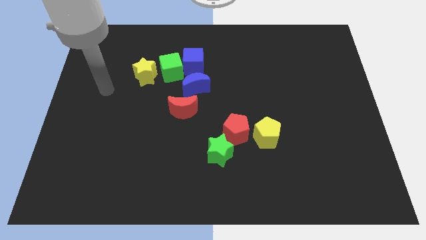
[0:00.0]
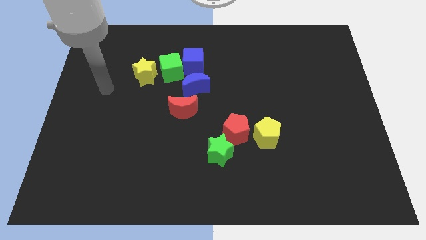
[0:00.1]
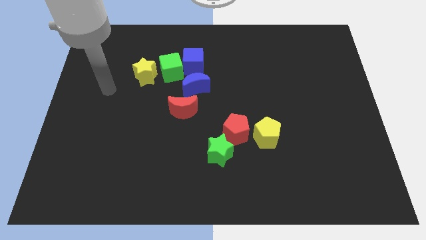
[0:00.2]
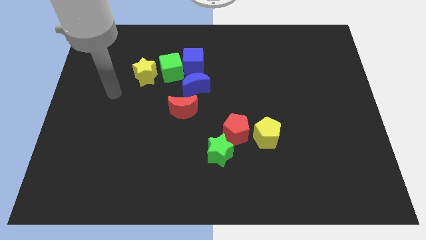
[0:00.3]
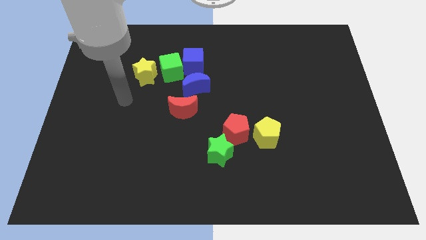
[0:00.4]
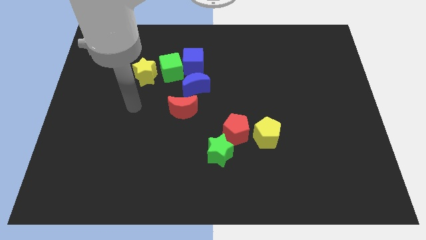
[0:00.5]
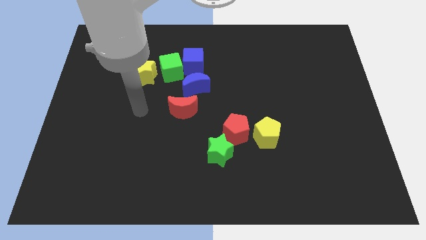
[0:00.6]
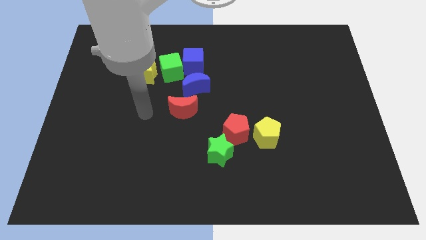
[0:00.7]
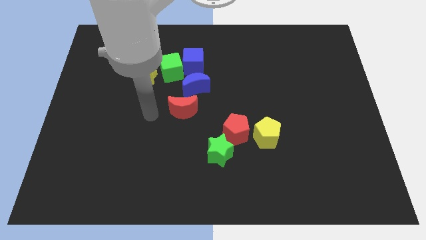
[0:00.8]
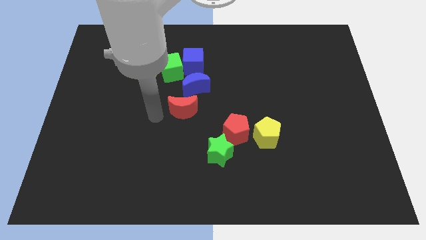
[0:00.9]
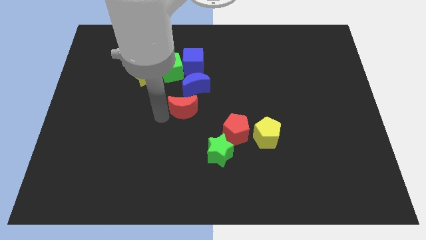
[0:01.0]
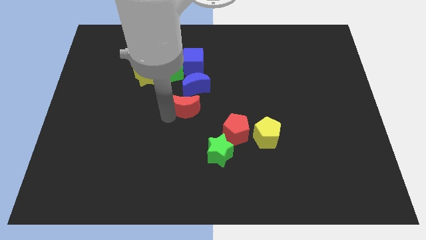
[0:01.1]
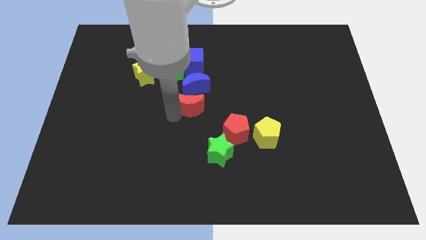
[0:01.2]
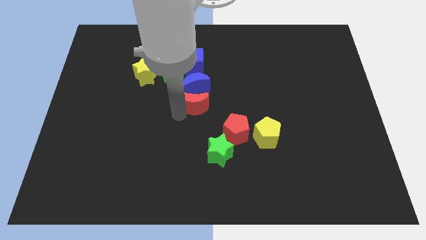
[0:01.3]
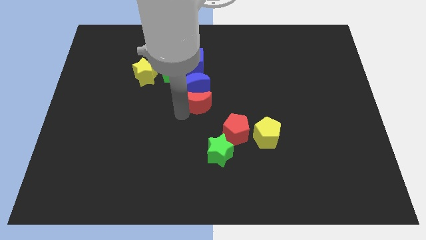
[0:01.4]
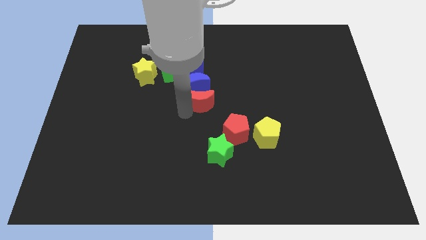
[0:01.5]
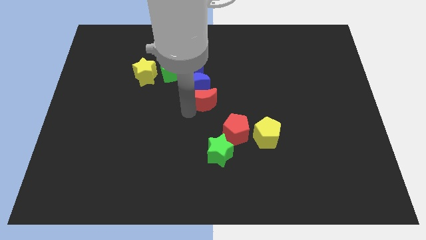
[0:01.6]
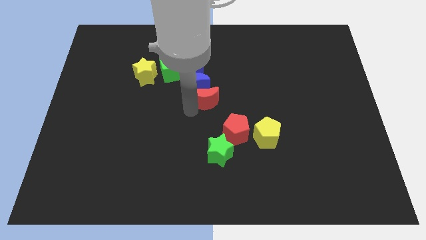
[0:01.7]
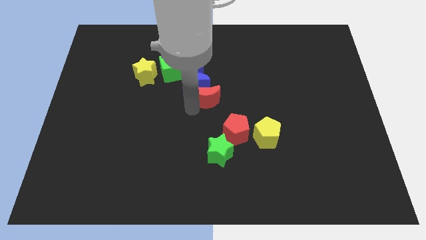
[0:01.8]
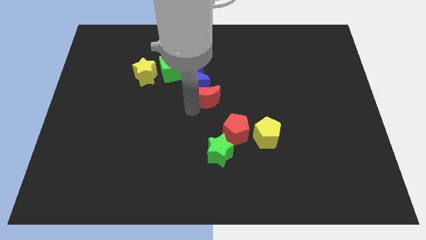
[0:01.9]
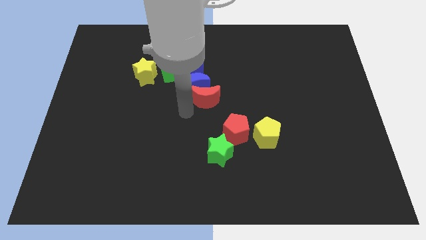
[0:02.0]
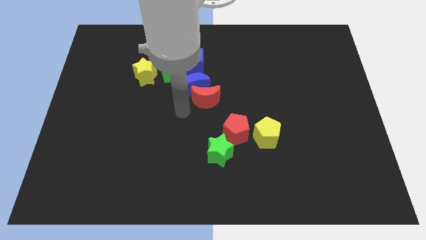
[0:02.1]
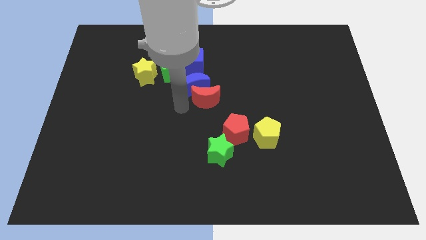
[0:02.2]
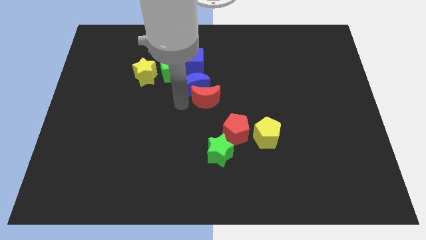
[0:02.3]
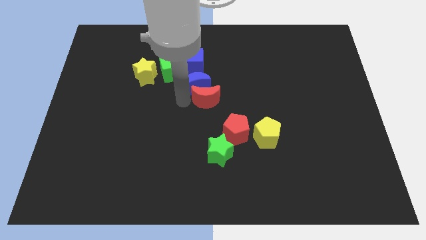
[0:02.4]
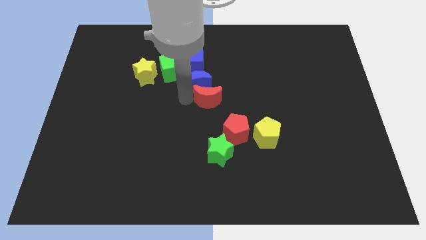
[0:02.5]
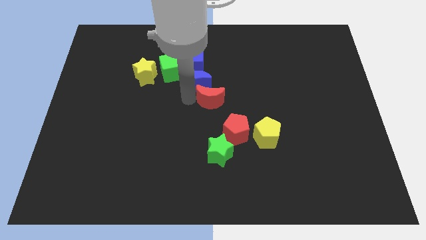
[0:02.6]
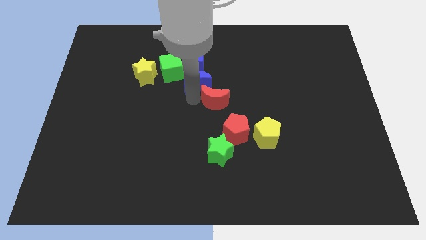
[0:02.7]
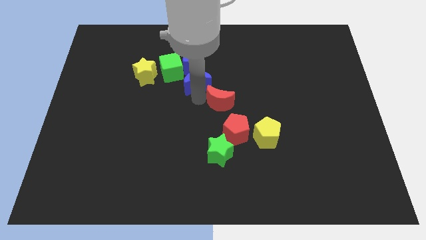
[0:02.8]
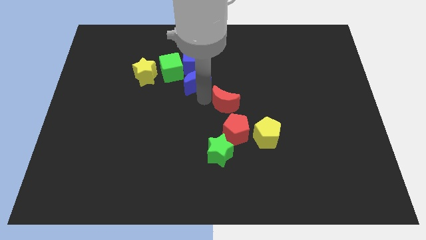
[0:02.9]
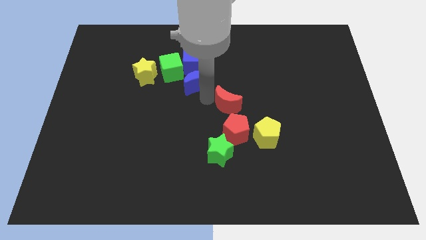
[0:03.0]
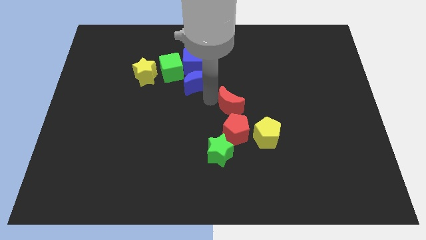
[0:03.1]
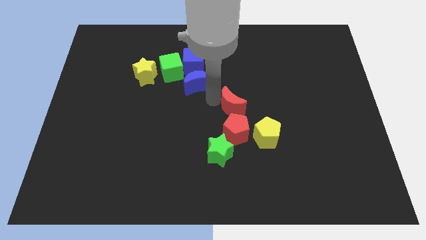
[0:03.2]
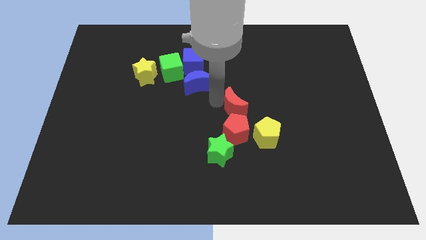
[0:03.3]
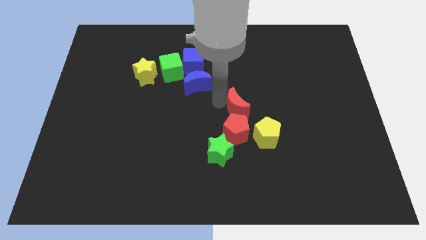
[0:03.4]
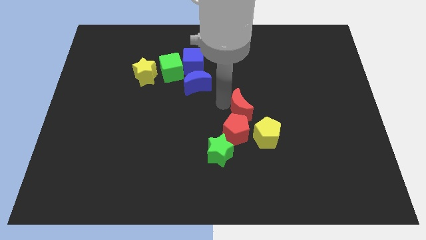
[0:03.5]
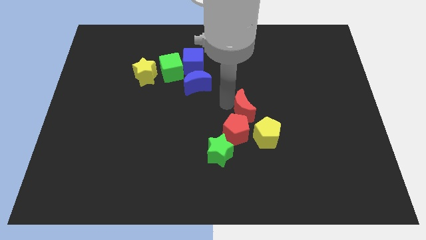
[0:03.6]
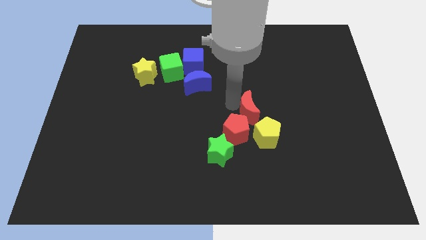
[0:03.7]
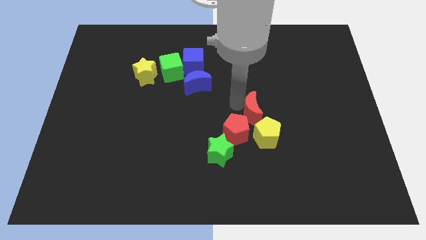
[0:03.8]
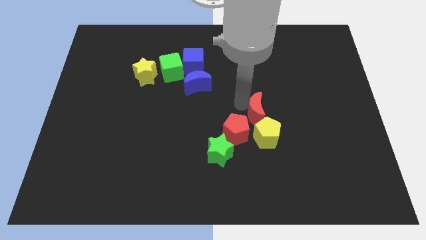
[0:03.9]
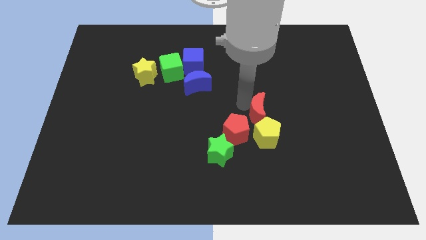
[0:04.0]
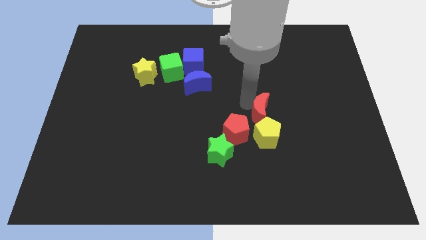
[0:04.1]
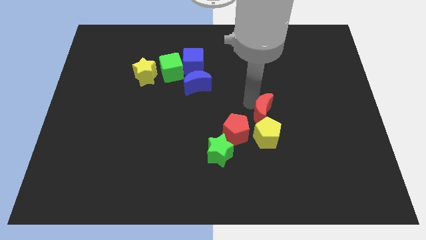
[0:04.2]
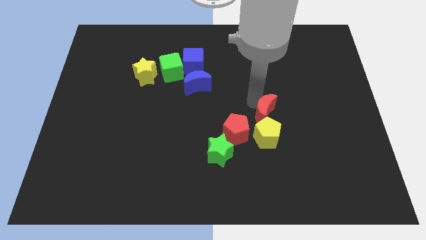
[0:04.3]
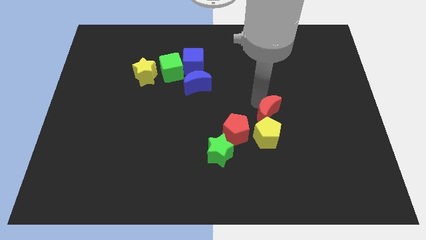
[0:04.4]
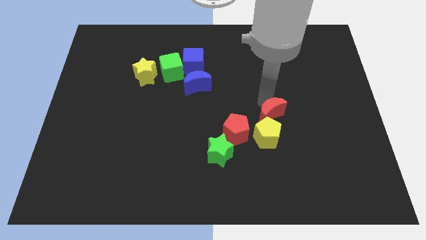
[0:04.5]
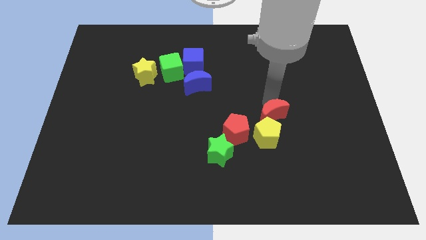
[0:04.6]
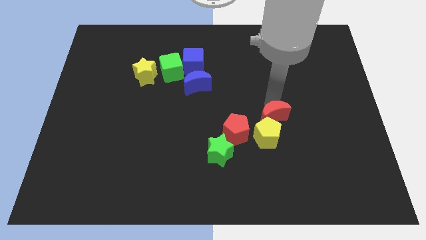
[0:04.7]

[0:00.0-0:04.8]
slide the red moon next to the yellow pentagon

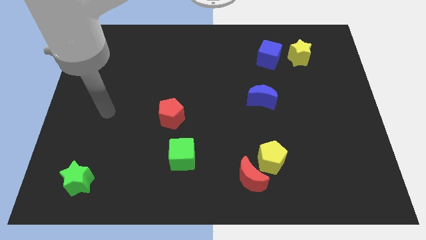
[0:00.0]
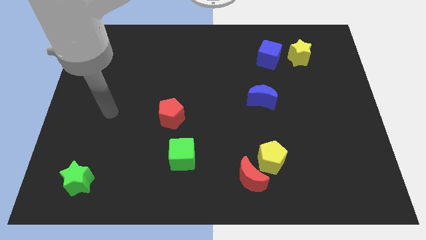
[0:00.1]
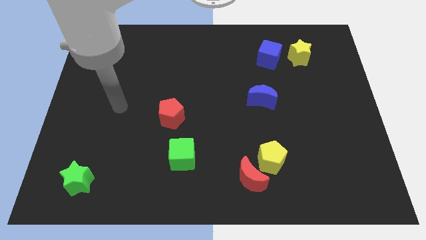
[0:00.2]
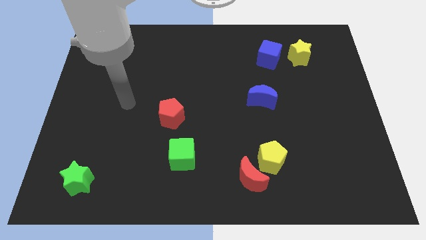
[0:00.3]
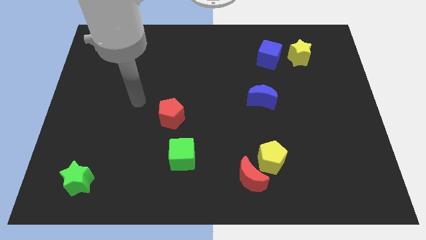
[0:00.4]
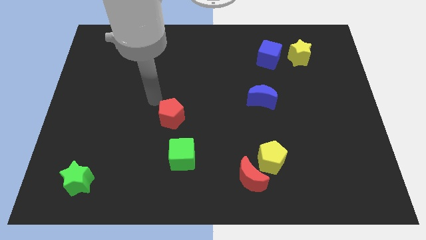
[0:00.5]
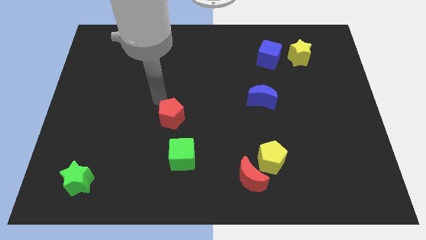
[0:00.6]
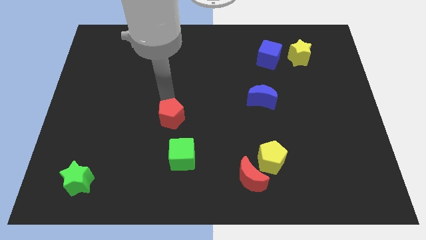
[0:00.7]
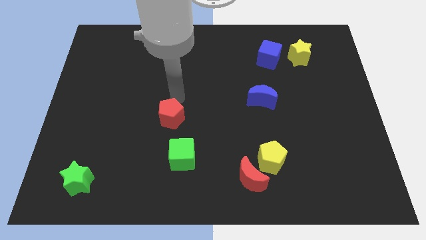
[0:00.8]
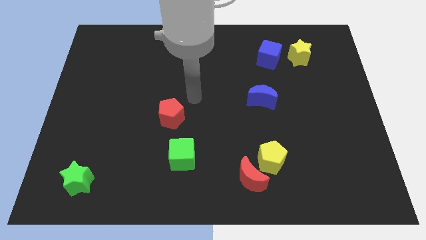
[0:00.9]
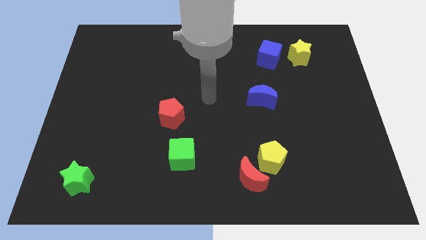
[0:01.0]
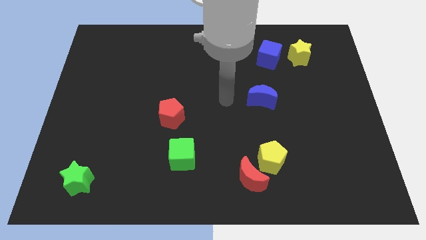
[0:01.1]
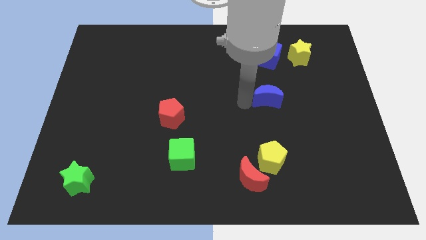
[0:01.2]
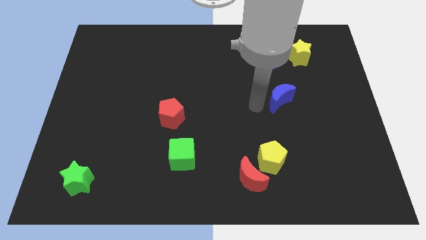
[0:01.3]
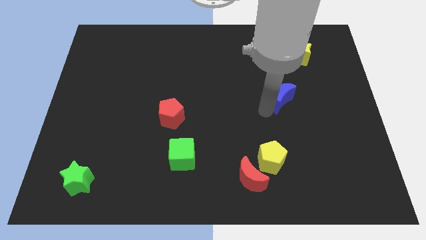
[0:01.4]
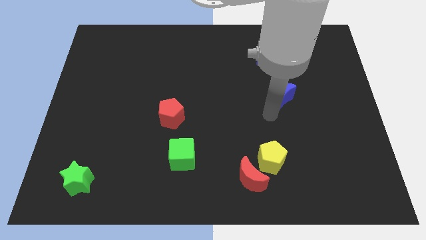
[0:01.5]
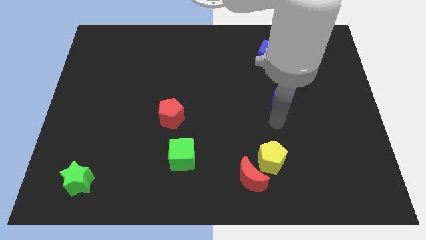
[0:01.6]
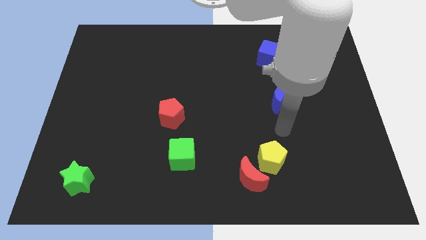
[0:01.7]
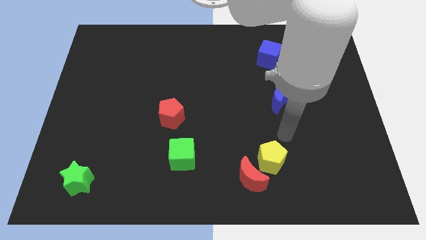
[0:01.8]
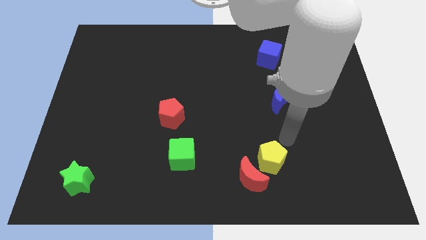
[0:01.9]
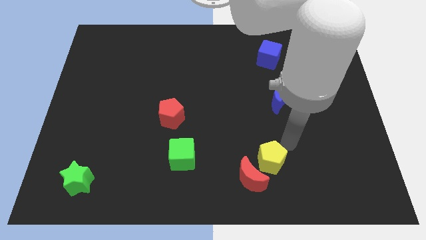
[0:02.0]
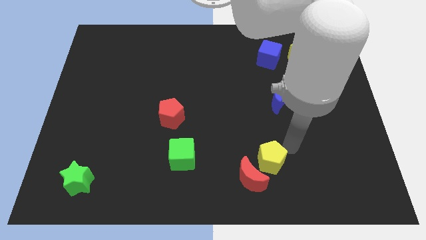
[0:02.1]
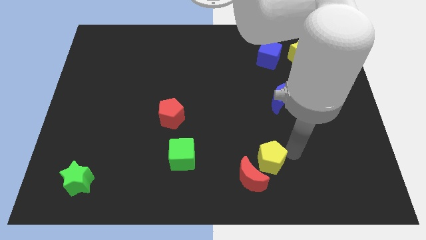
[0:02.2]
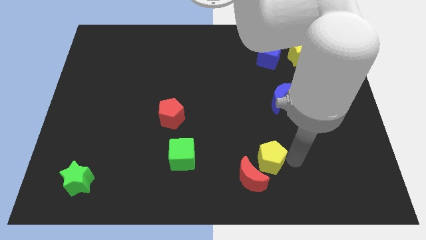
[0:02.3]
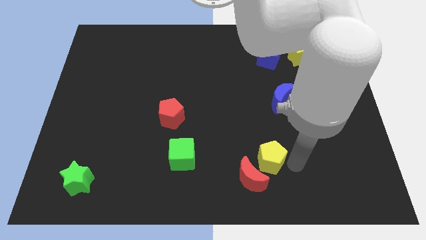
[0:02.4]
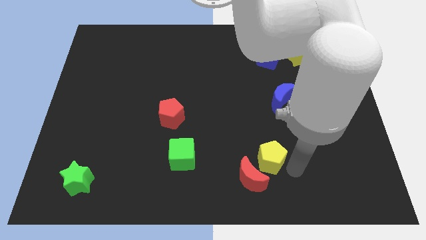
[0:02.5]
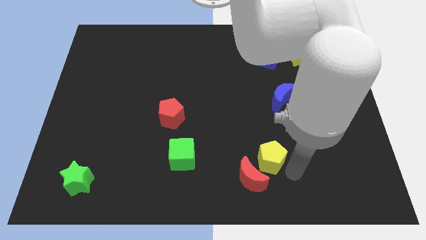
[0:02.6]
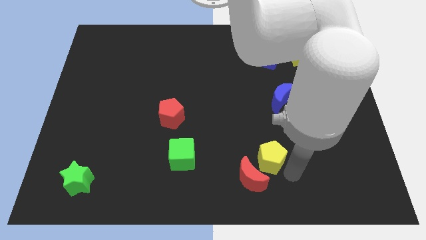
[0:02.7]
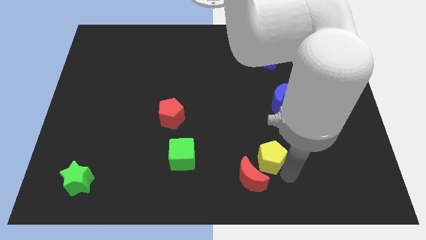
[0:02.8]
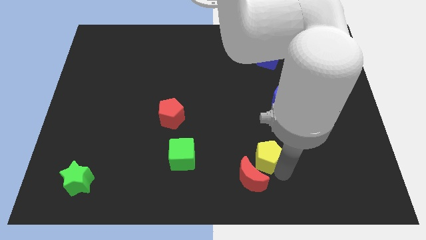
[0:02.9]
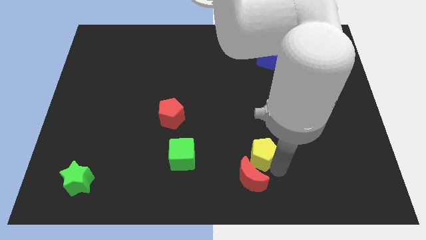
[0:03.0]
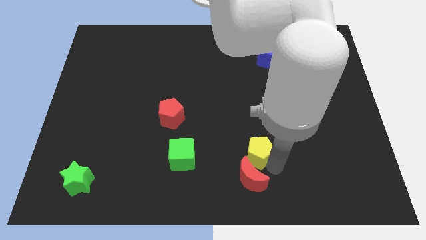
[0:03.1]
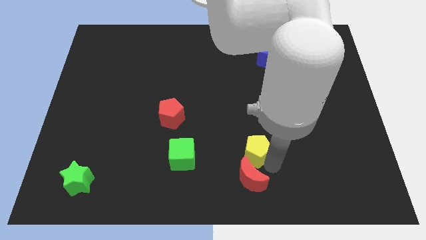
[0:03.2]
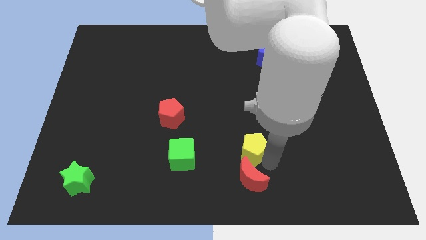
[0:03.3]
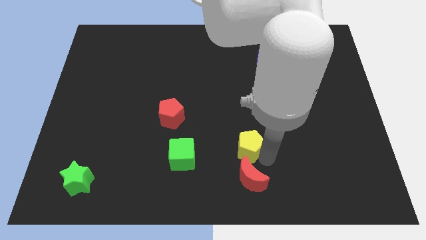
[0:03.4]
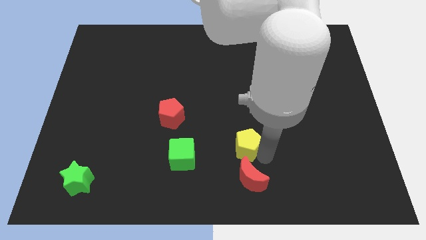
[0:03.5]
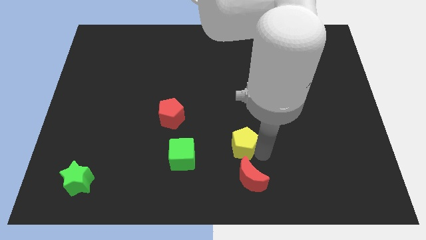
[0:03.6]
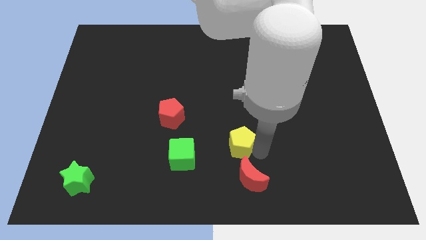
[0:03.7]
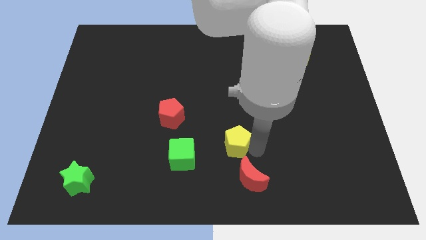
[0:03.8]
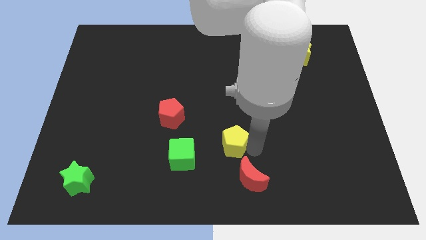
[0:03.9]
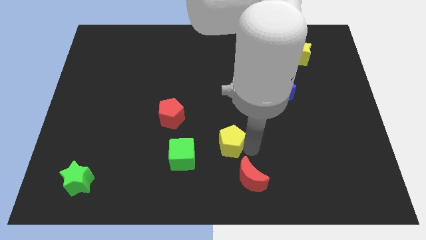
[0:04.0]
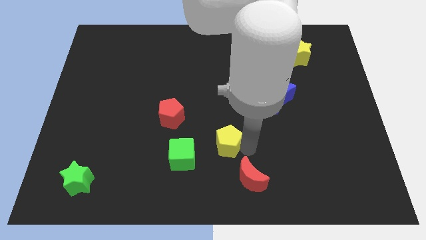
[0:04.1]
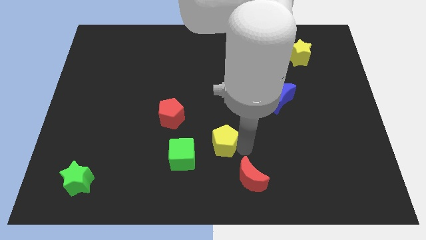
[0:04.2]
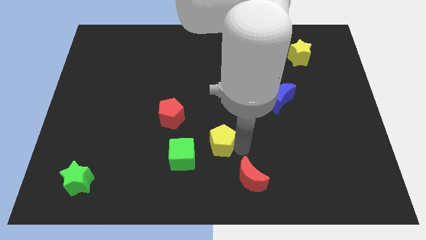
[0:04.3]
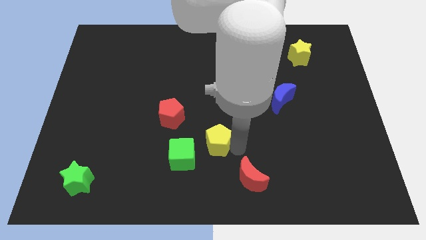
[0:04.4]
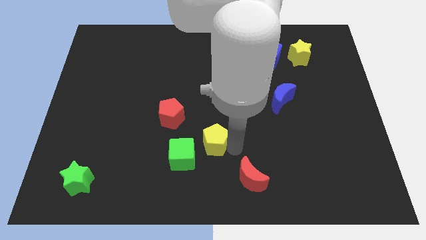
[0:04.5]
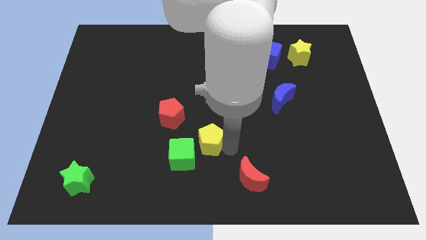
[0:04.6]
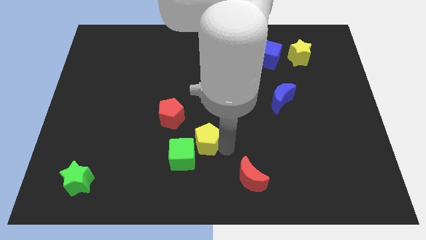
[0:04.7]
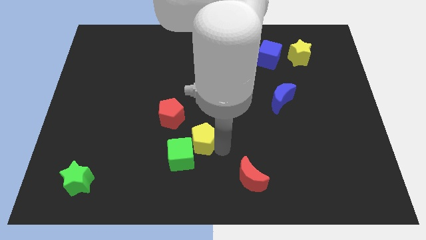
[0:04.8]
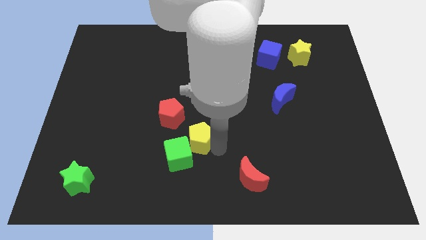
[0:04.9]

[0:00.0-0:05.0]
put the yellow pentagon close to the green cube
